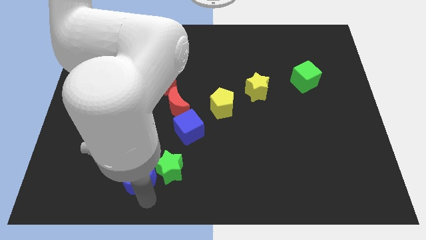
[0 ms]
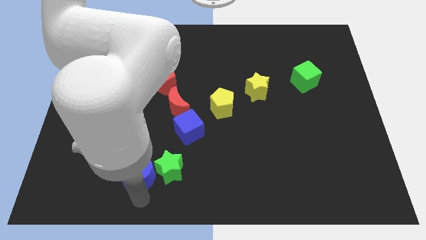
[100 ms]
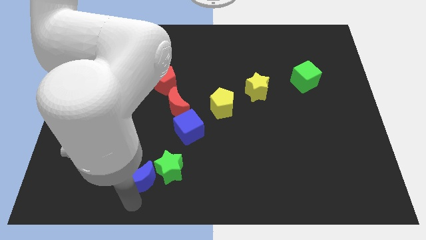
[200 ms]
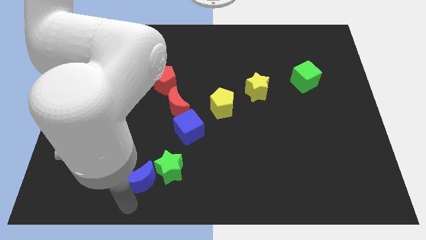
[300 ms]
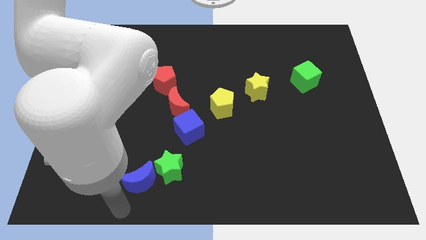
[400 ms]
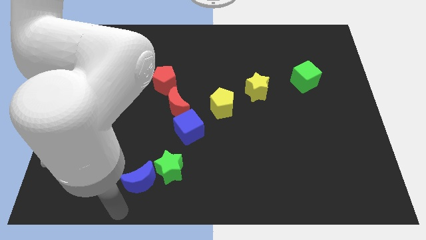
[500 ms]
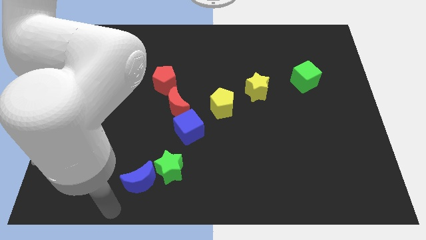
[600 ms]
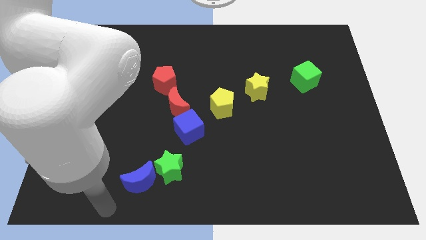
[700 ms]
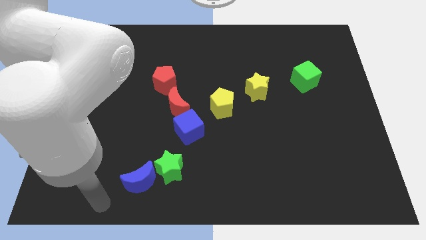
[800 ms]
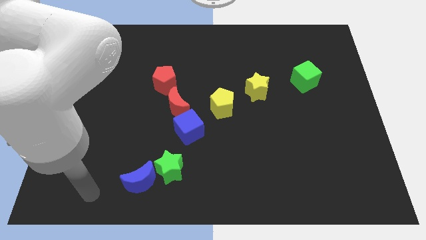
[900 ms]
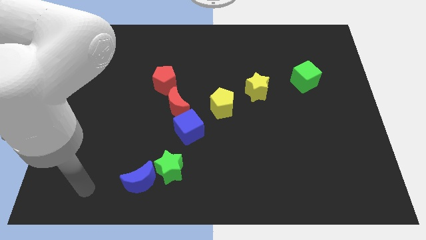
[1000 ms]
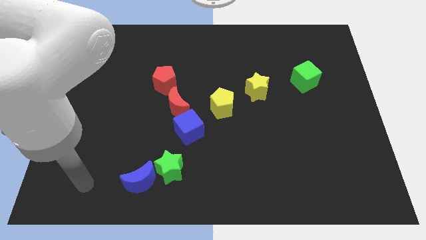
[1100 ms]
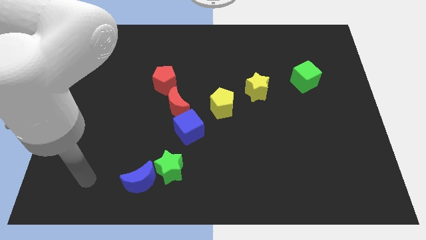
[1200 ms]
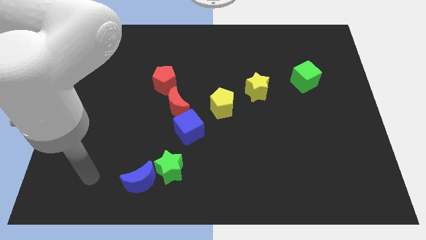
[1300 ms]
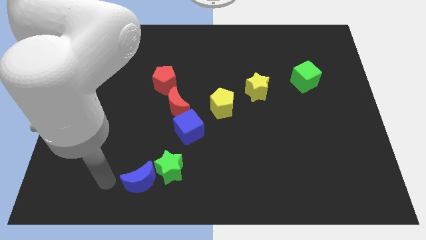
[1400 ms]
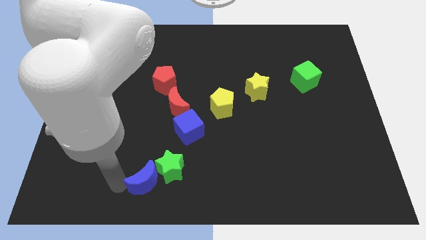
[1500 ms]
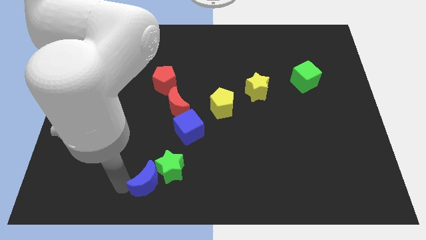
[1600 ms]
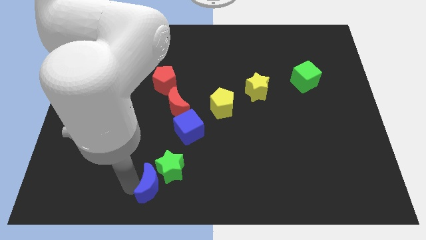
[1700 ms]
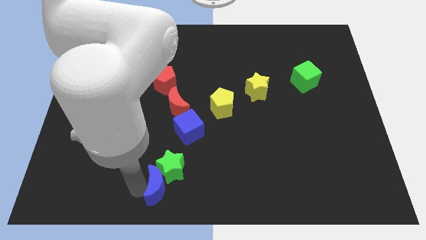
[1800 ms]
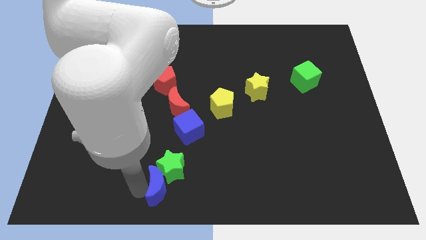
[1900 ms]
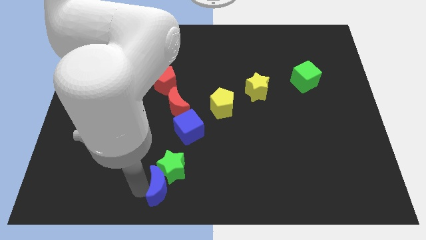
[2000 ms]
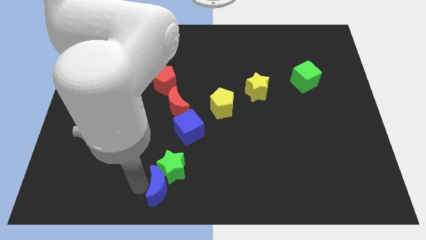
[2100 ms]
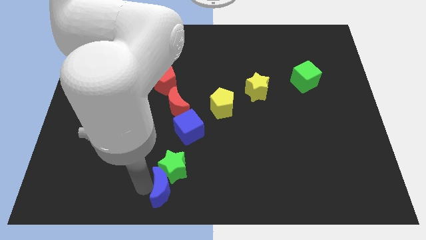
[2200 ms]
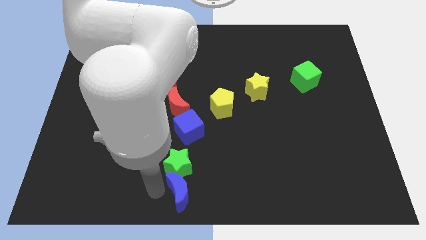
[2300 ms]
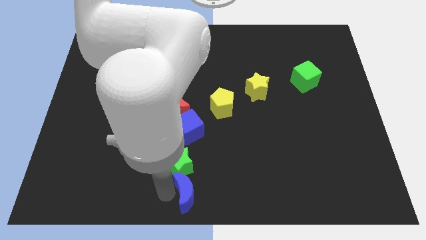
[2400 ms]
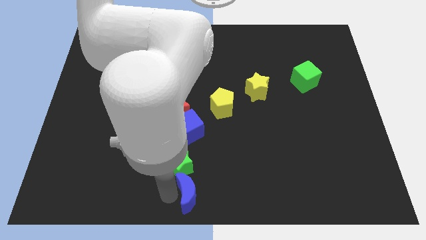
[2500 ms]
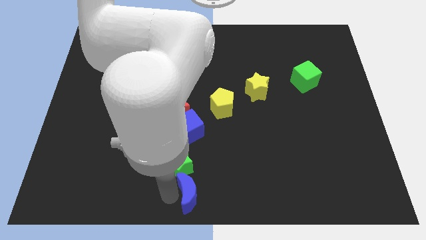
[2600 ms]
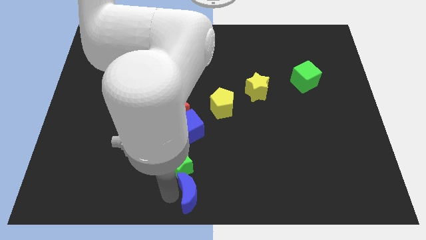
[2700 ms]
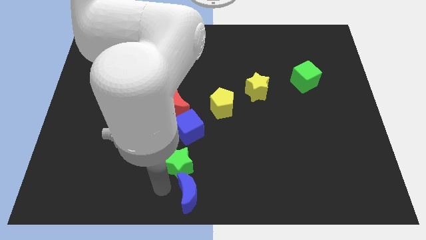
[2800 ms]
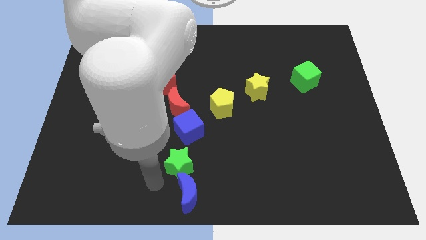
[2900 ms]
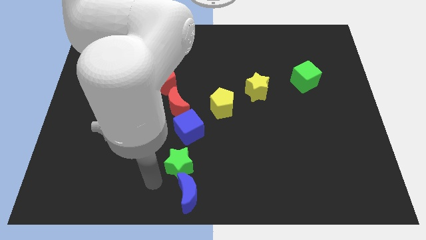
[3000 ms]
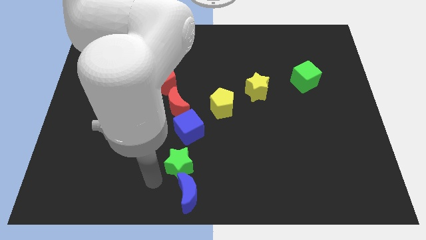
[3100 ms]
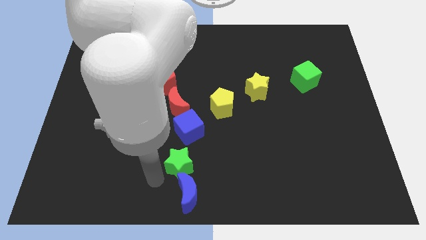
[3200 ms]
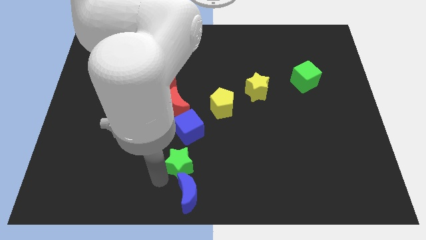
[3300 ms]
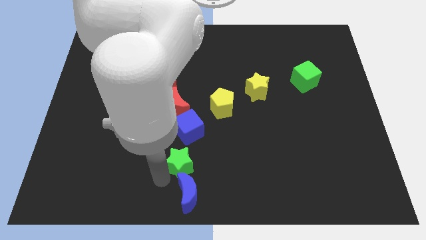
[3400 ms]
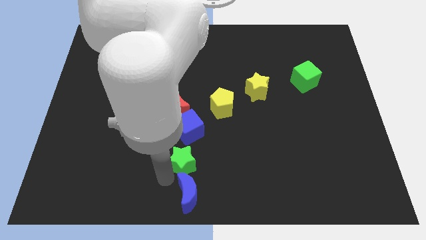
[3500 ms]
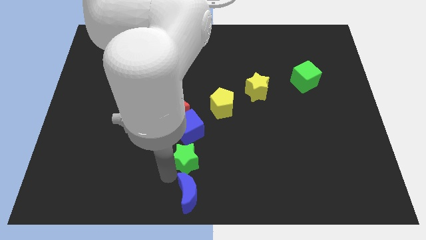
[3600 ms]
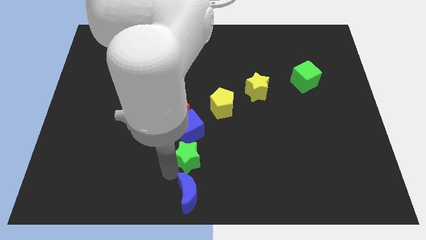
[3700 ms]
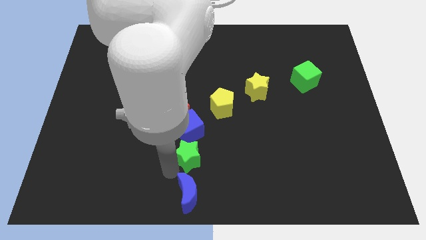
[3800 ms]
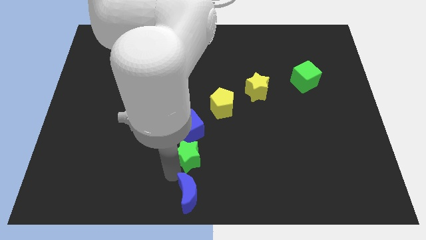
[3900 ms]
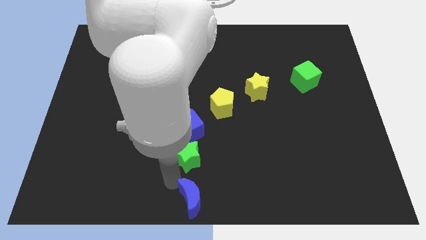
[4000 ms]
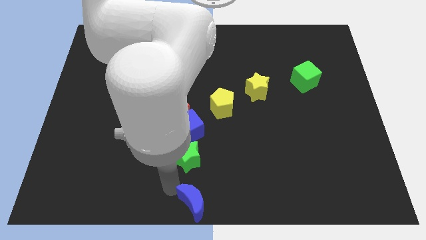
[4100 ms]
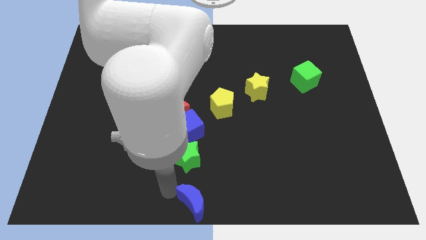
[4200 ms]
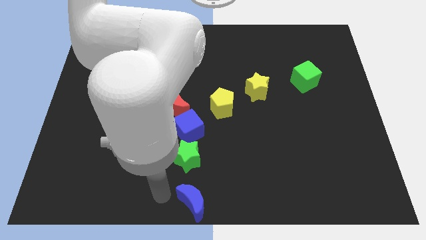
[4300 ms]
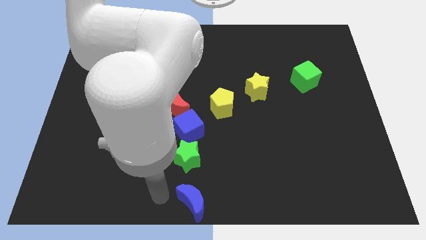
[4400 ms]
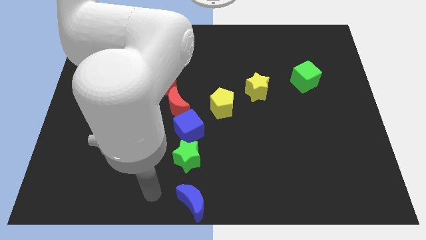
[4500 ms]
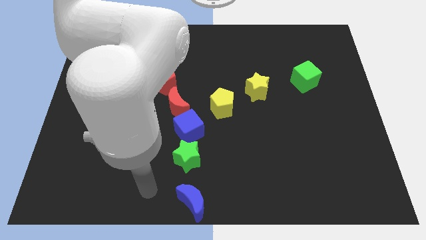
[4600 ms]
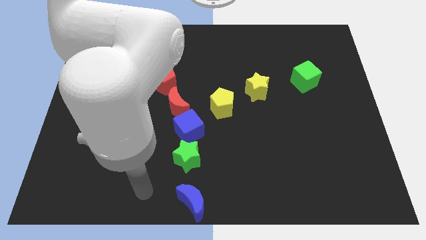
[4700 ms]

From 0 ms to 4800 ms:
separate the green star and blue moon

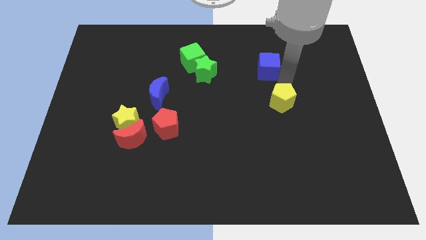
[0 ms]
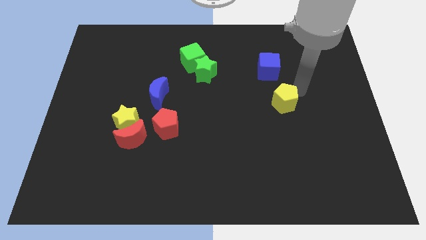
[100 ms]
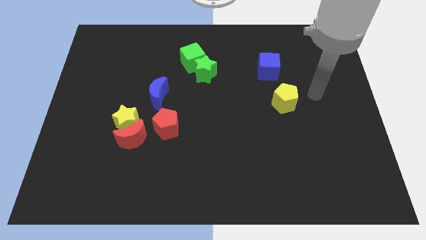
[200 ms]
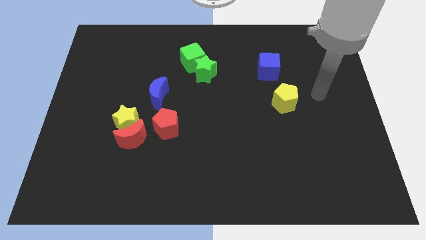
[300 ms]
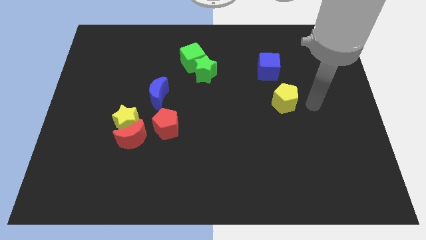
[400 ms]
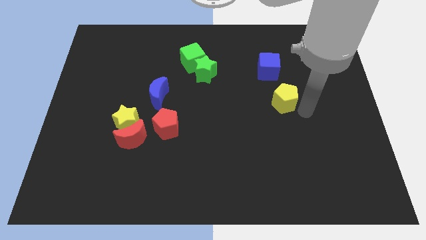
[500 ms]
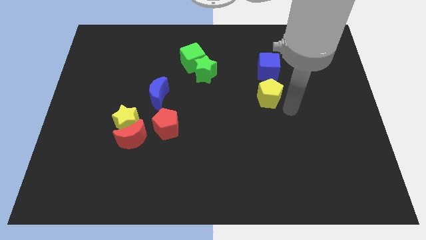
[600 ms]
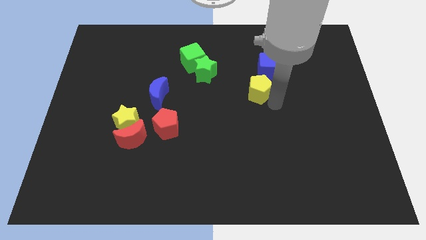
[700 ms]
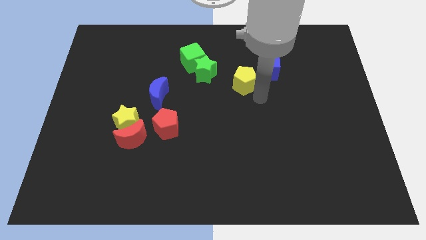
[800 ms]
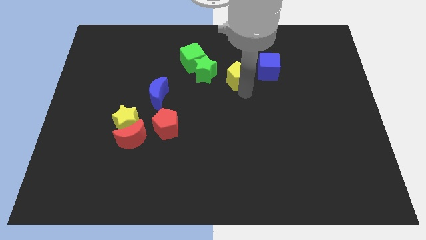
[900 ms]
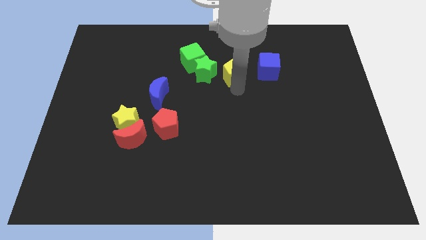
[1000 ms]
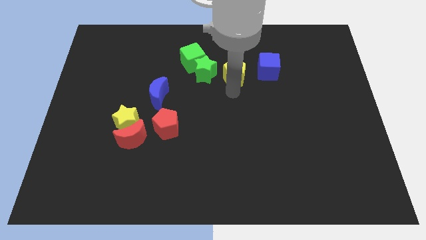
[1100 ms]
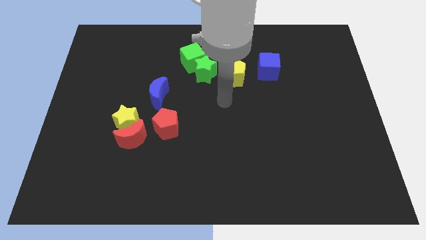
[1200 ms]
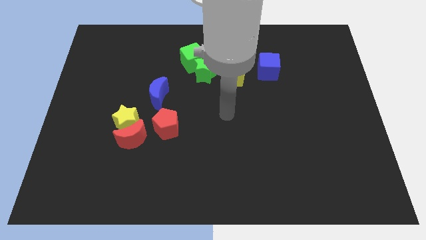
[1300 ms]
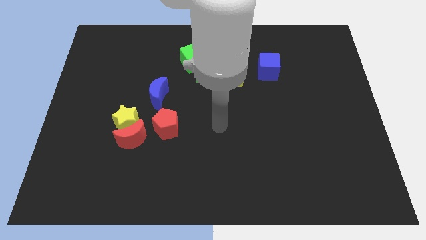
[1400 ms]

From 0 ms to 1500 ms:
move the yellow pentagon in between green star and blue cube

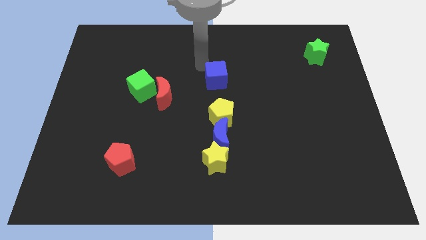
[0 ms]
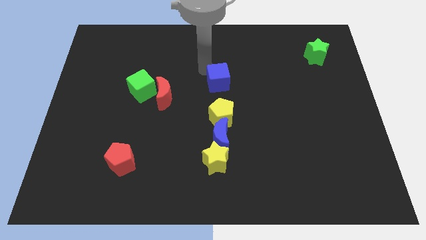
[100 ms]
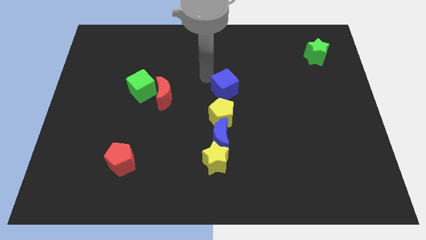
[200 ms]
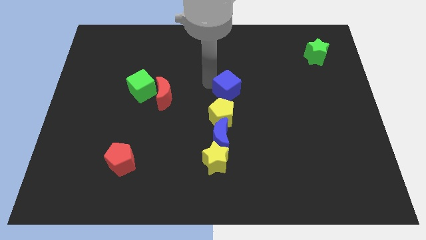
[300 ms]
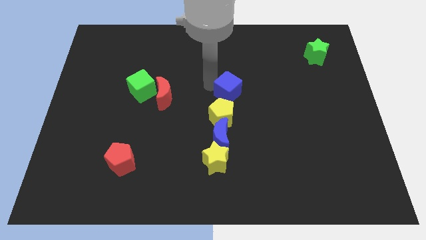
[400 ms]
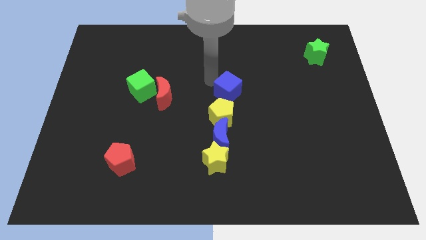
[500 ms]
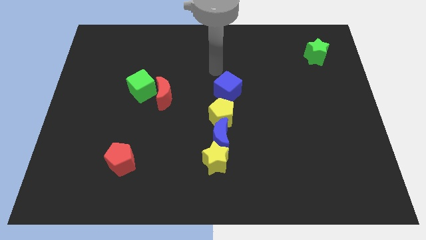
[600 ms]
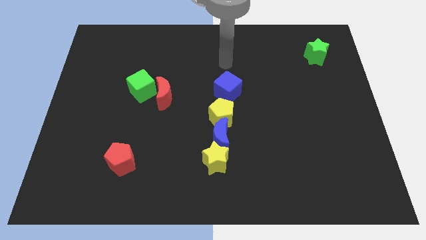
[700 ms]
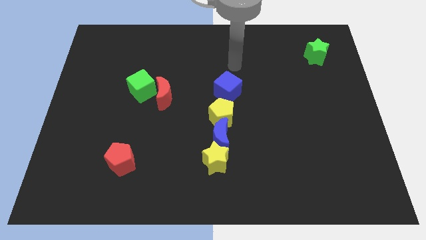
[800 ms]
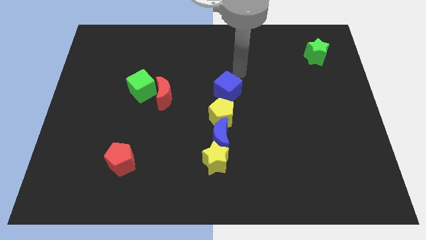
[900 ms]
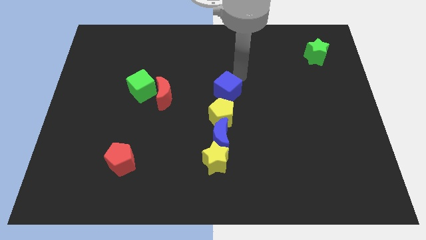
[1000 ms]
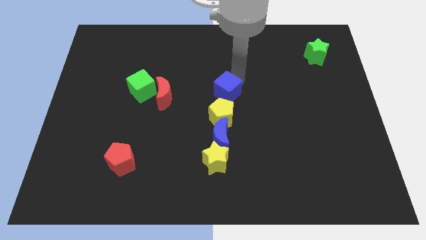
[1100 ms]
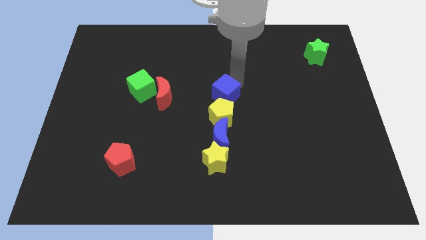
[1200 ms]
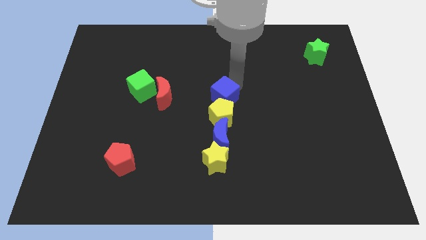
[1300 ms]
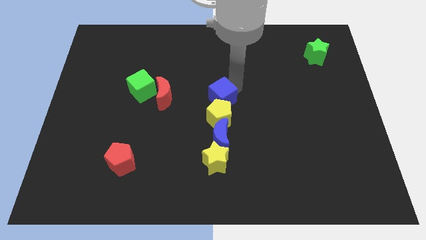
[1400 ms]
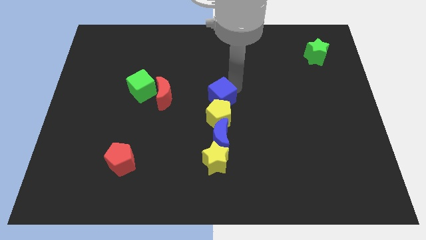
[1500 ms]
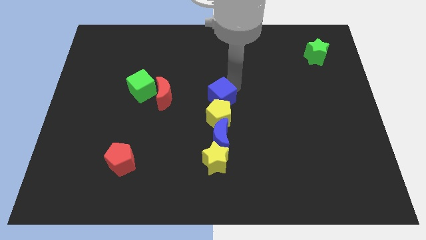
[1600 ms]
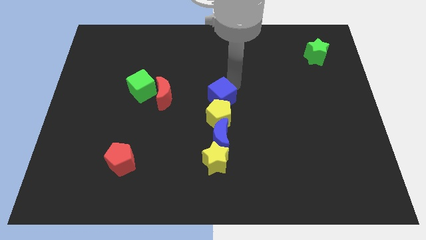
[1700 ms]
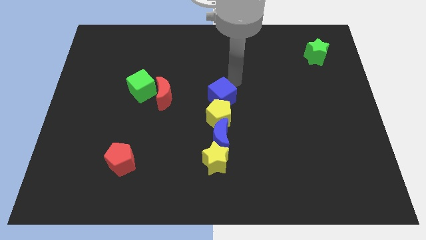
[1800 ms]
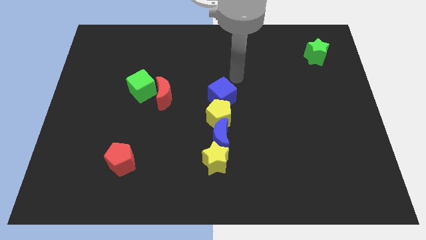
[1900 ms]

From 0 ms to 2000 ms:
move the blue cube to the center on the board

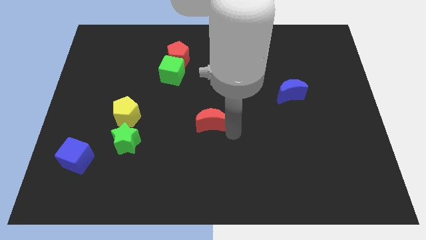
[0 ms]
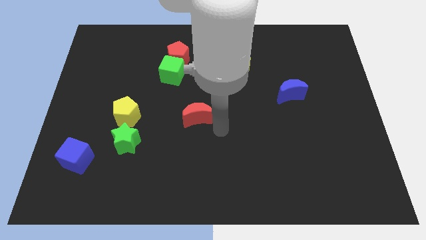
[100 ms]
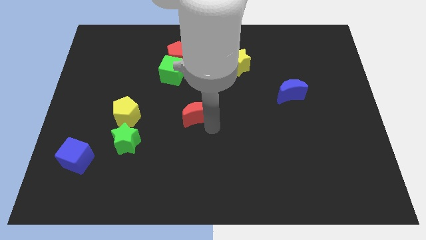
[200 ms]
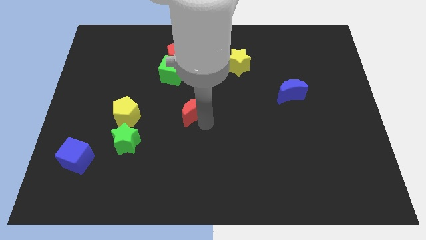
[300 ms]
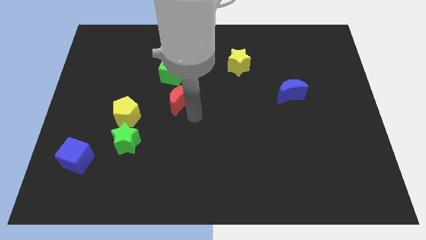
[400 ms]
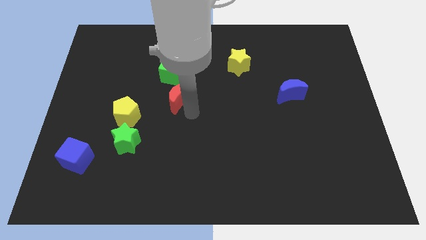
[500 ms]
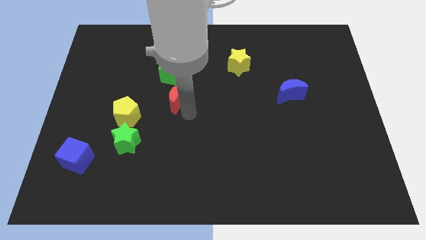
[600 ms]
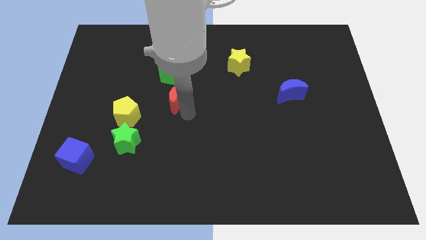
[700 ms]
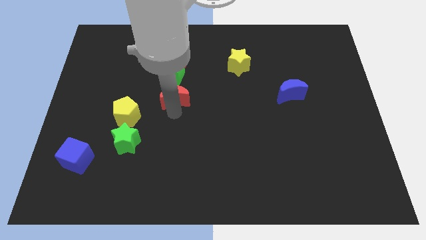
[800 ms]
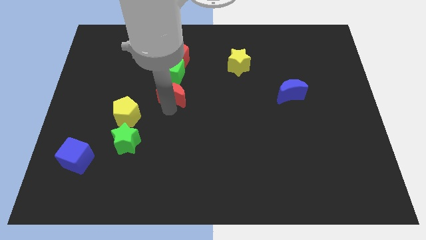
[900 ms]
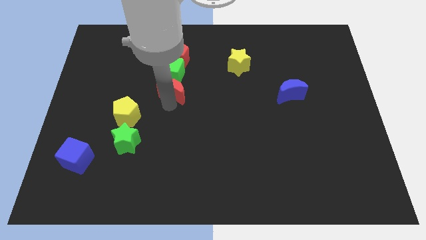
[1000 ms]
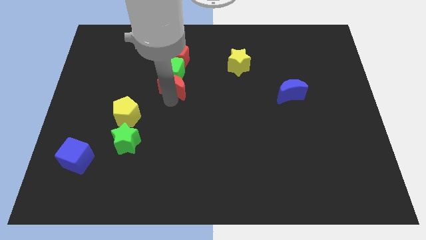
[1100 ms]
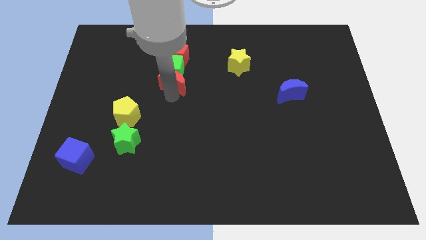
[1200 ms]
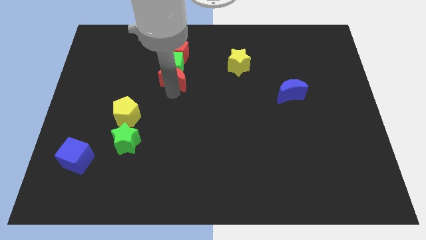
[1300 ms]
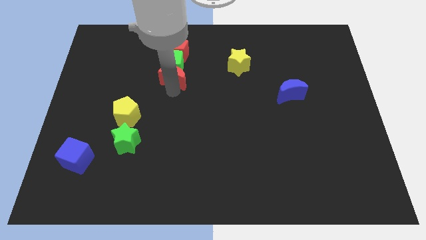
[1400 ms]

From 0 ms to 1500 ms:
push the red moon into the green cube
